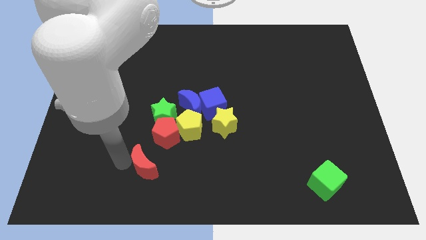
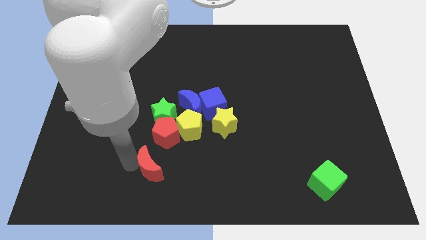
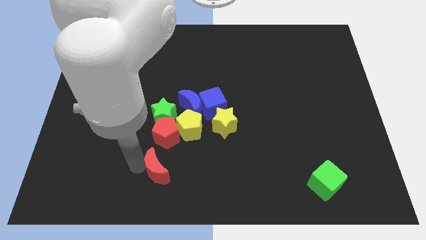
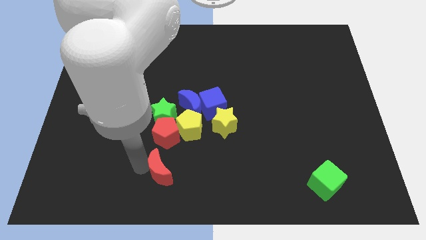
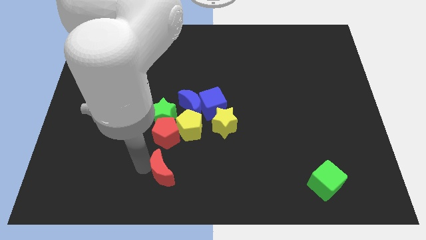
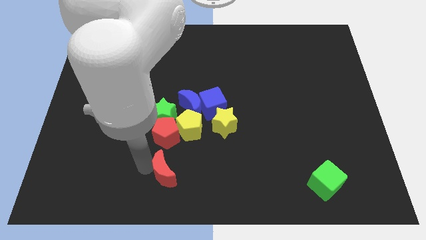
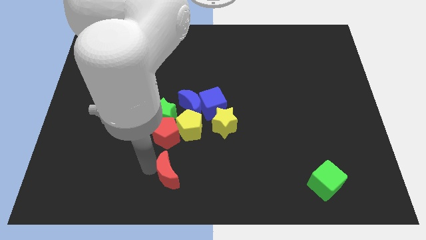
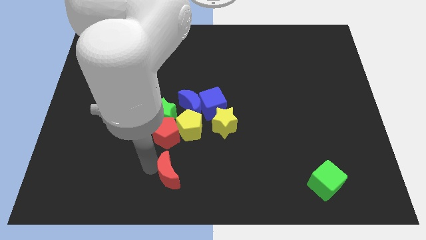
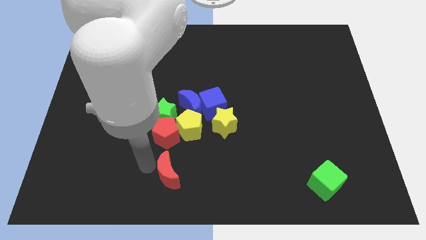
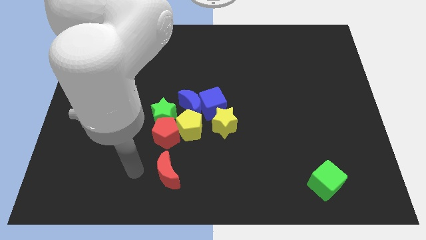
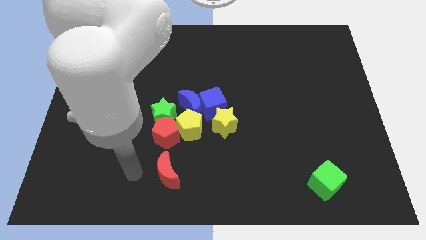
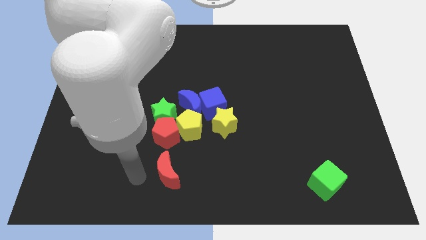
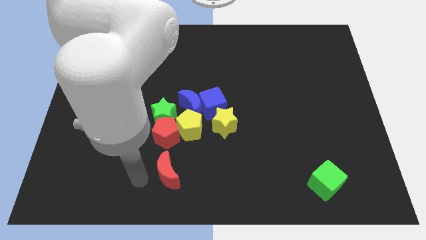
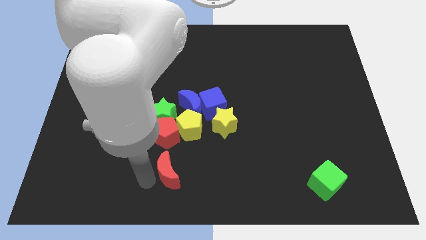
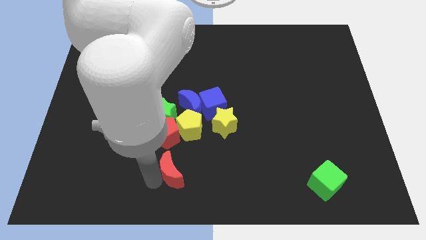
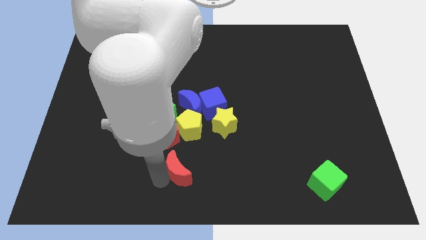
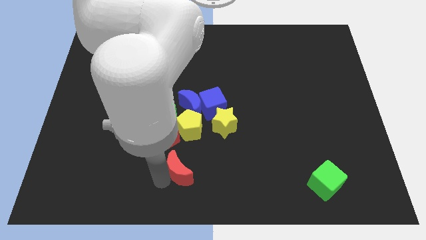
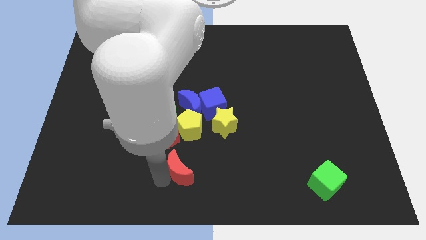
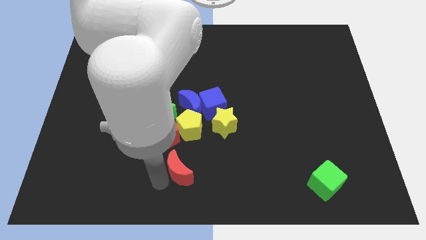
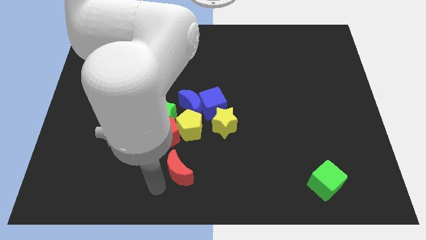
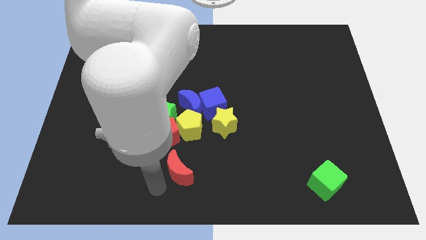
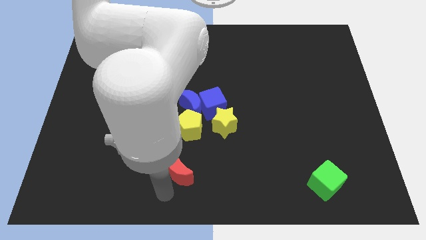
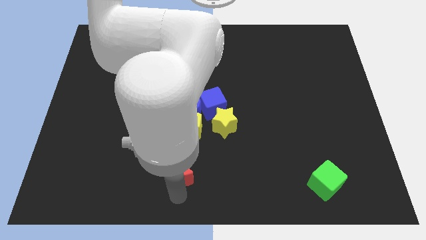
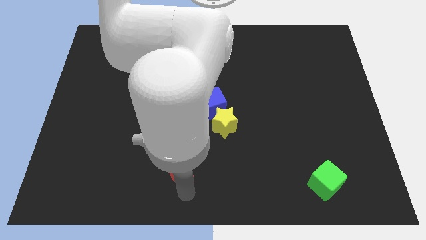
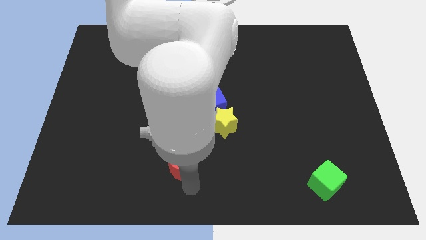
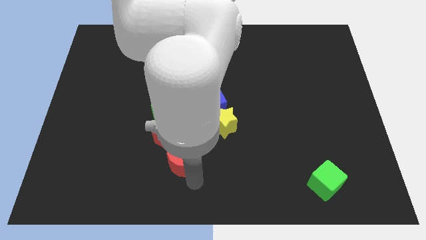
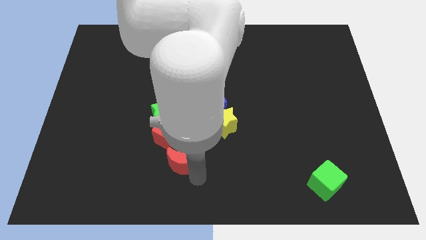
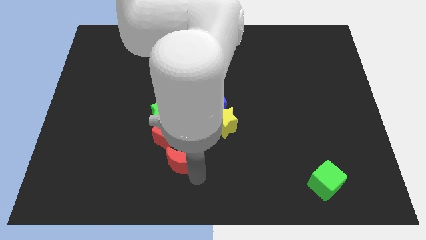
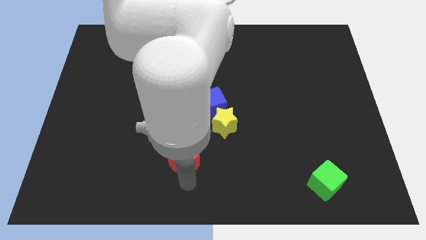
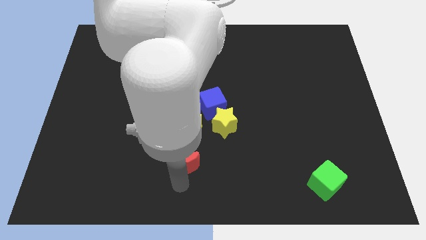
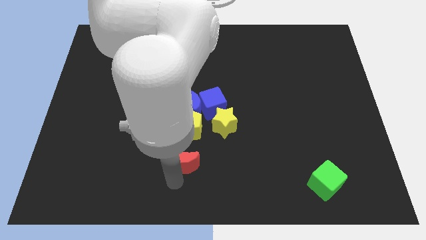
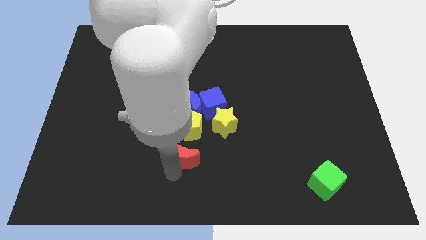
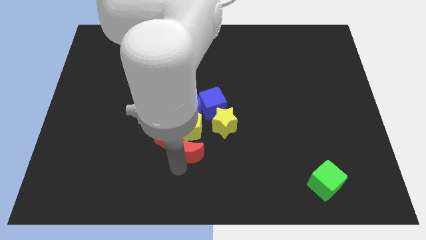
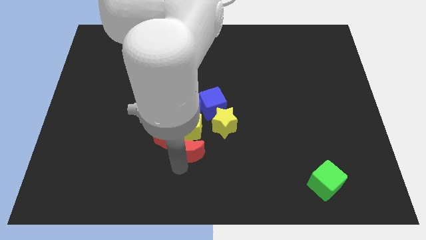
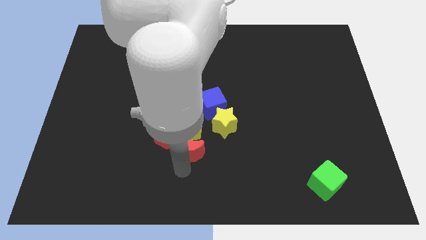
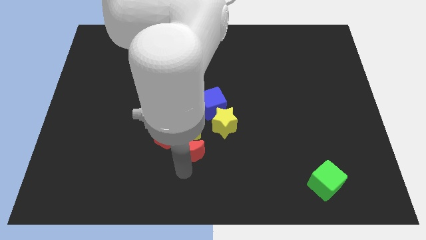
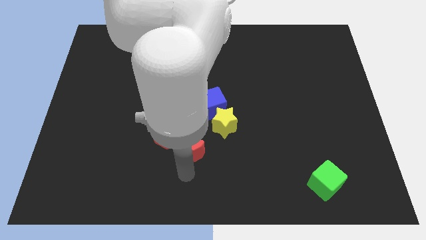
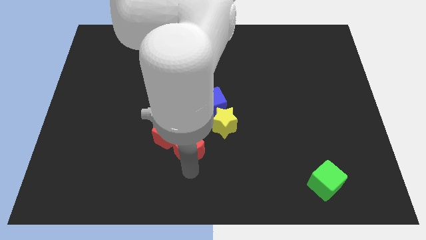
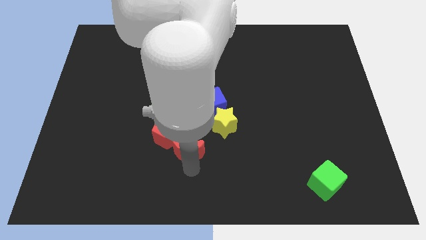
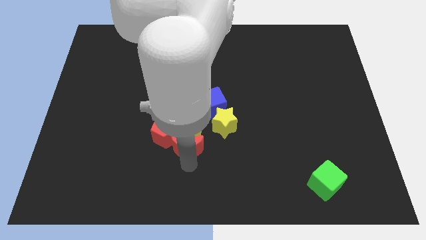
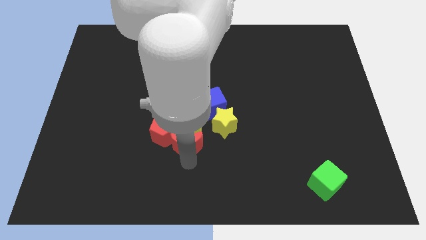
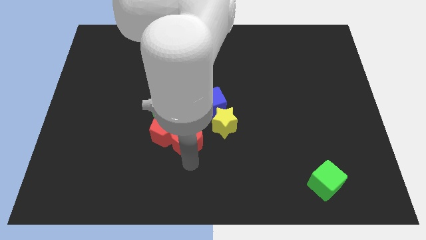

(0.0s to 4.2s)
push the red crescent into the group of blocks

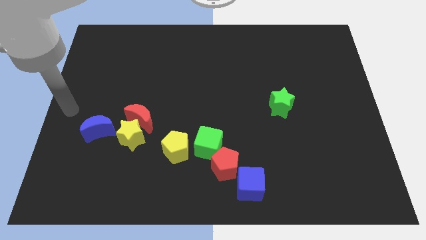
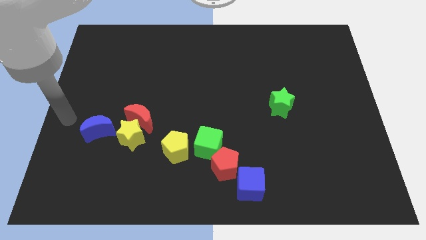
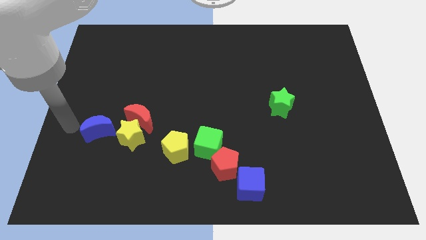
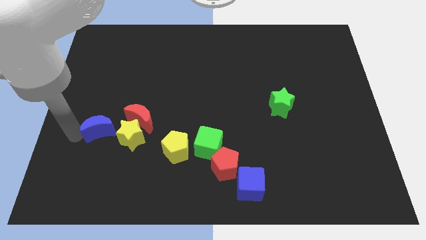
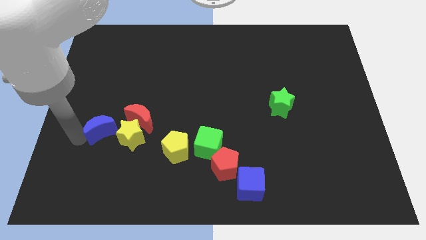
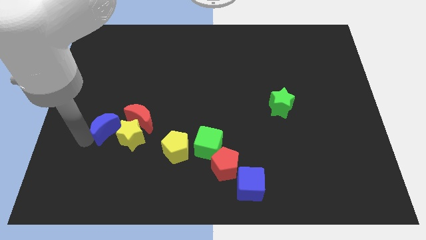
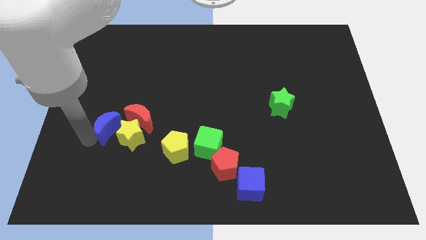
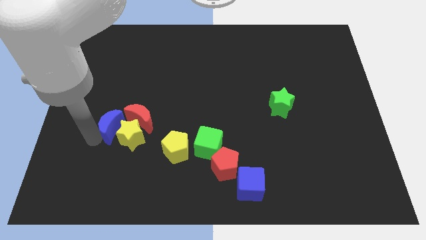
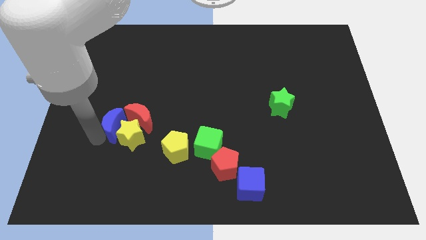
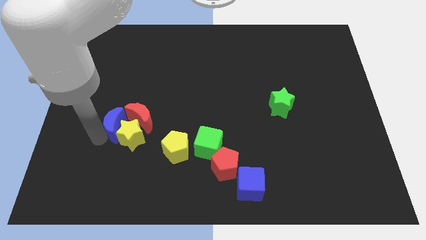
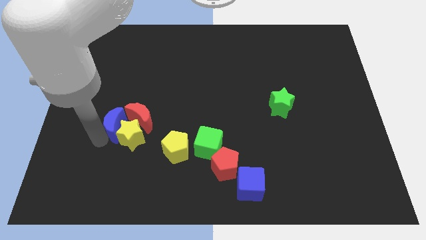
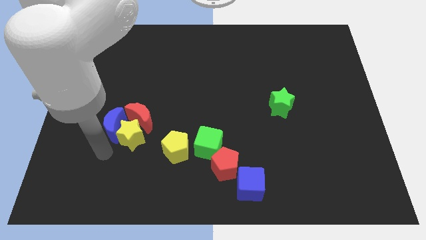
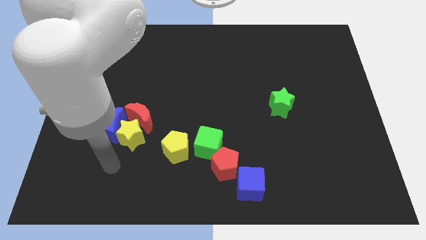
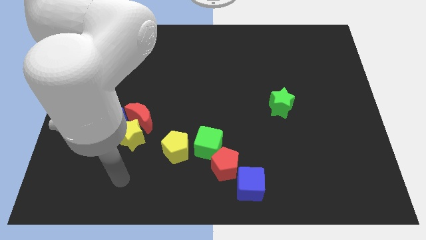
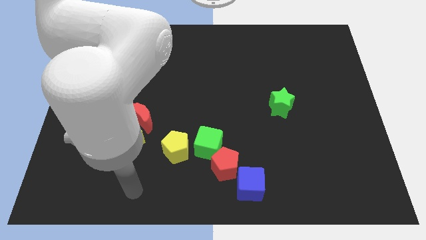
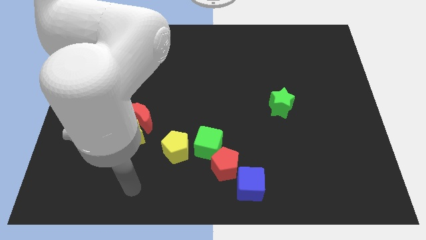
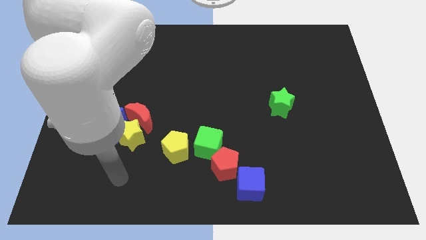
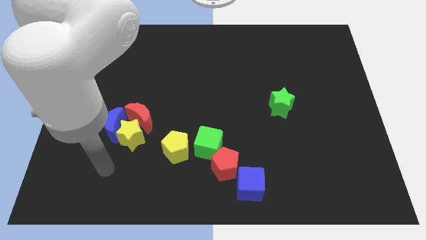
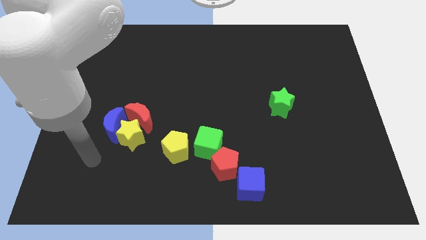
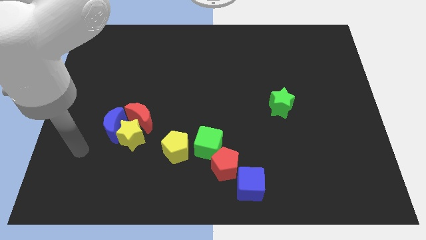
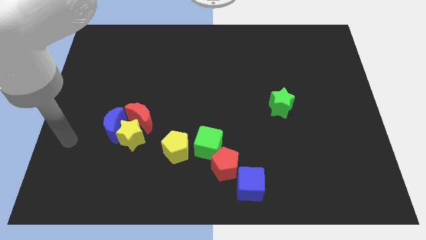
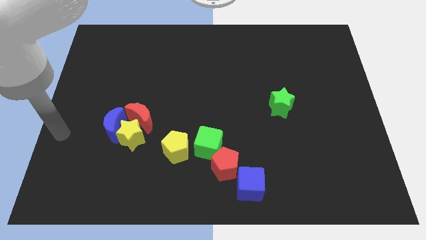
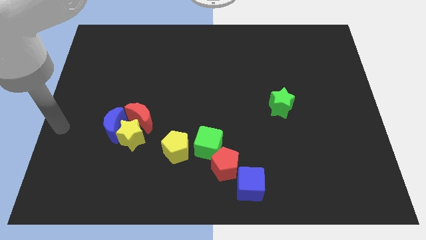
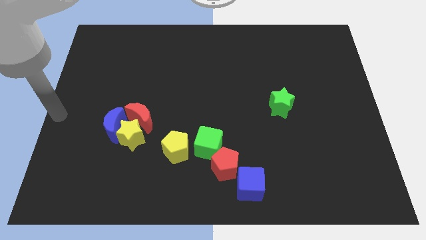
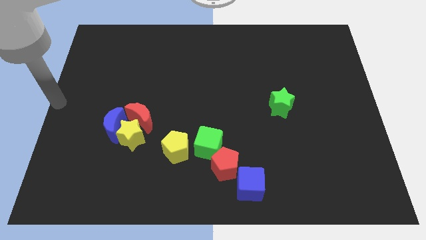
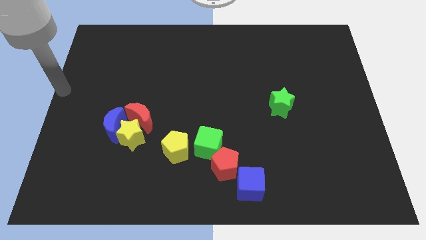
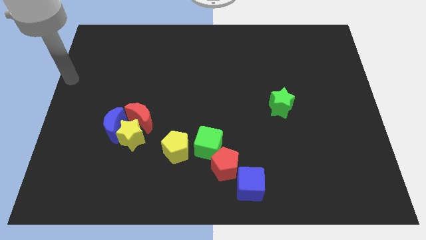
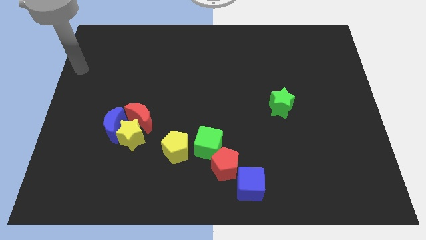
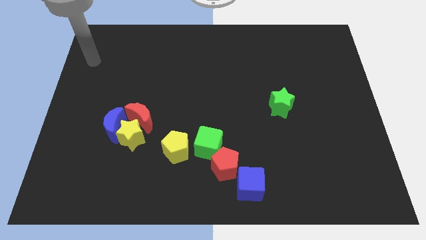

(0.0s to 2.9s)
move the blue crescent to the left of the yellow star

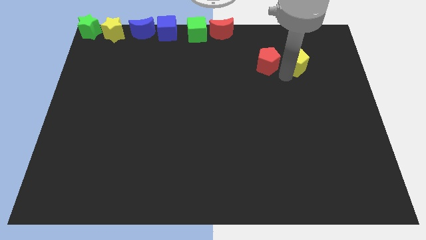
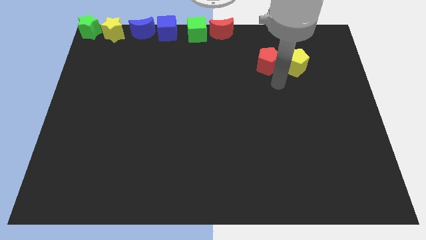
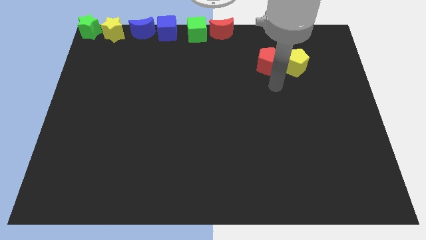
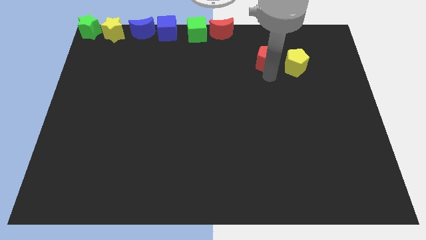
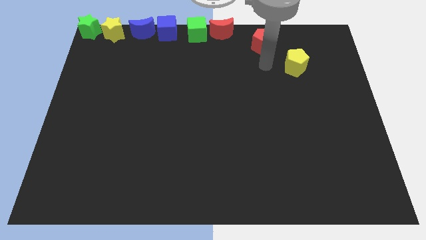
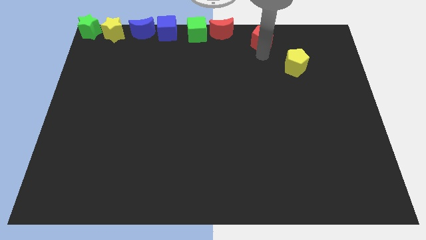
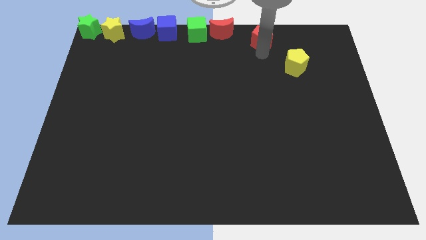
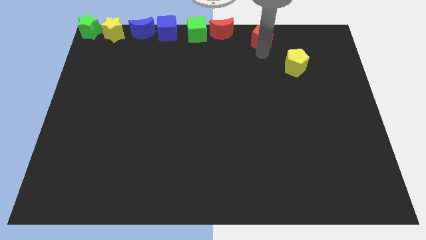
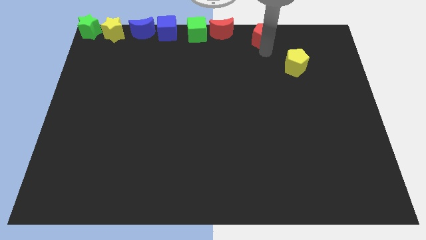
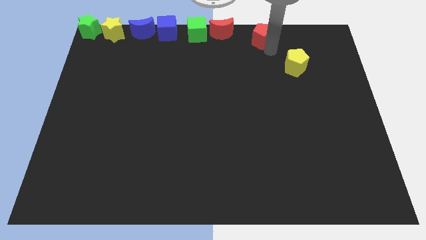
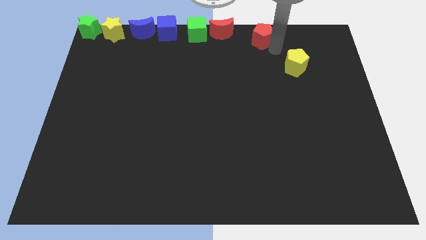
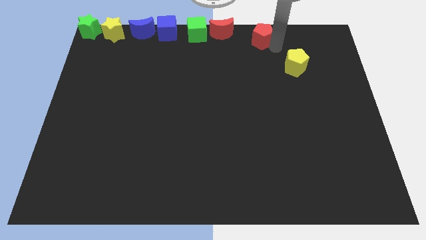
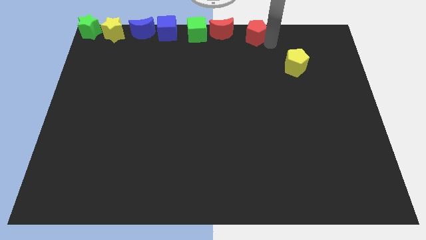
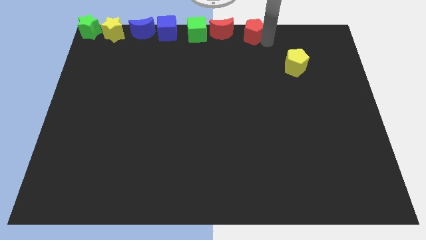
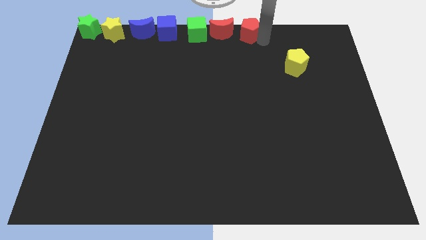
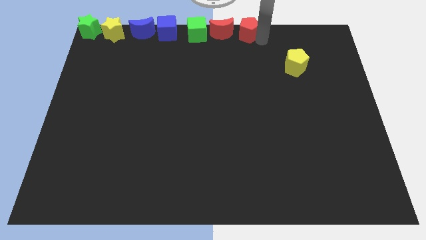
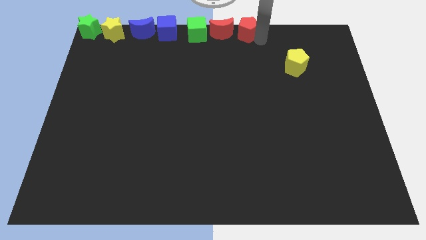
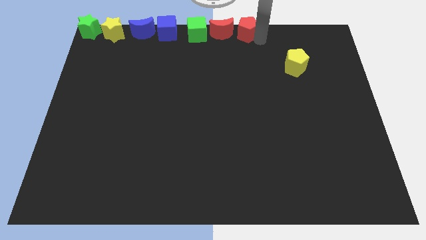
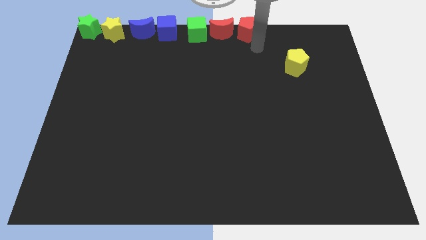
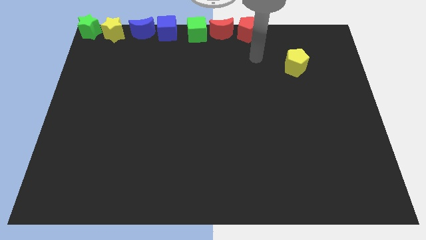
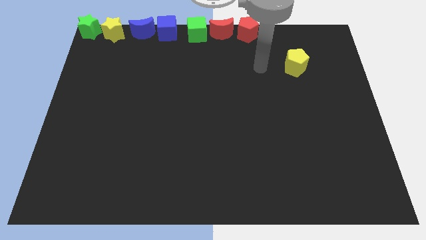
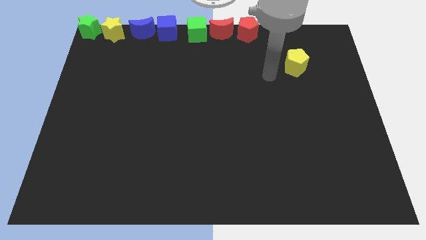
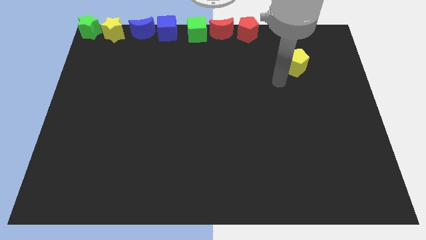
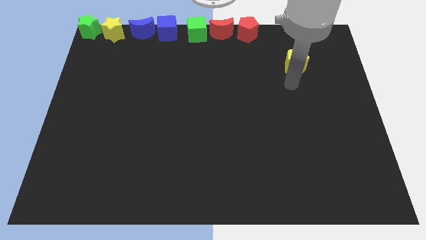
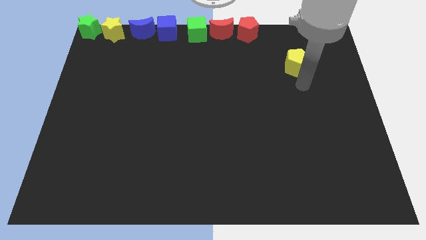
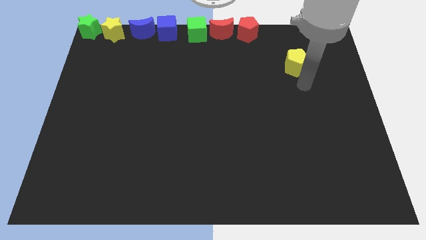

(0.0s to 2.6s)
move the red pentagon to the right side of the red moon
